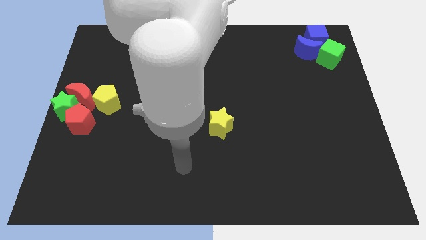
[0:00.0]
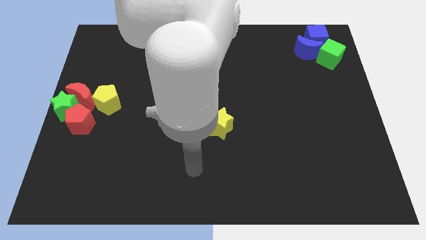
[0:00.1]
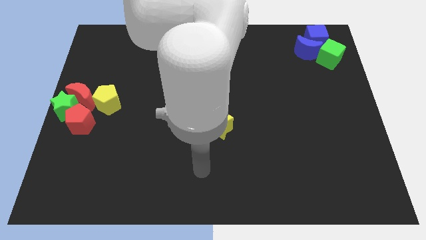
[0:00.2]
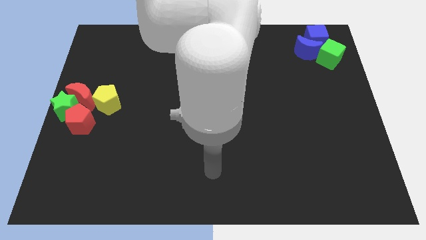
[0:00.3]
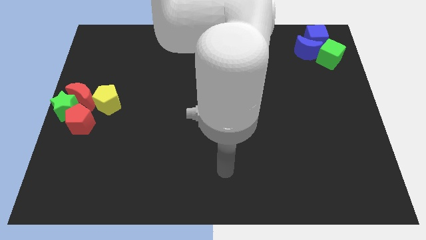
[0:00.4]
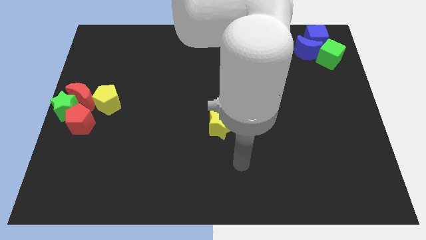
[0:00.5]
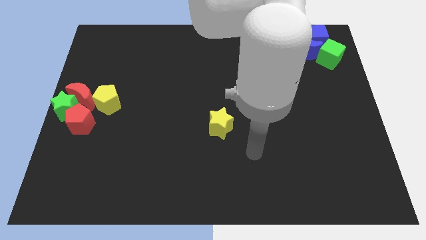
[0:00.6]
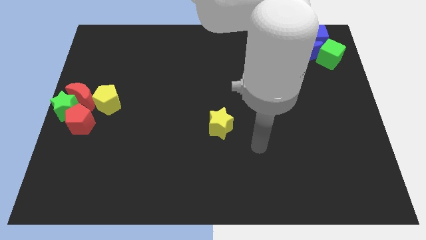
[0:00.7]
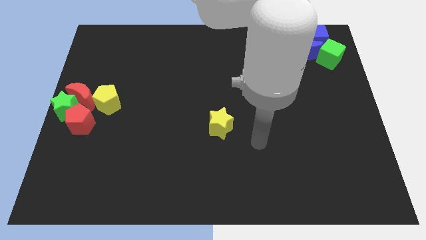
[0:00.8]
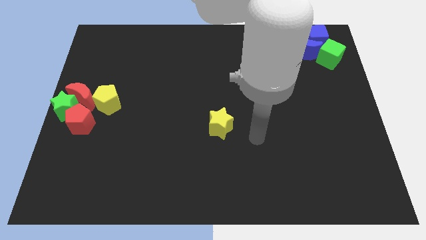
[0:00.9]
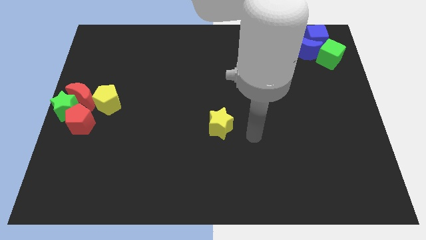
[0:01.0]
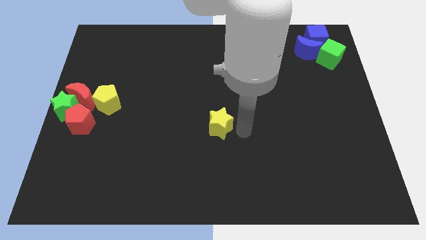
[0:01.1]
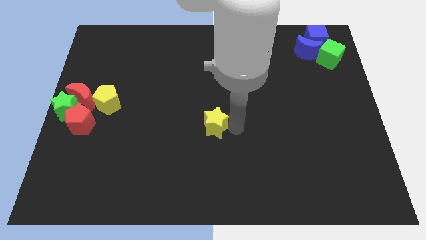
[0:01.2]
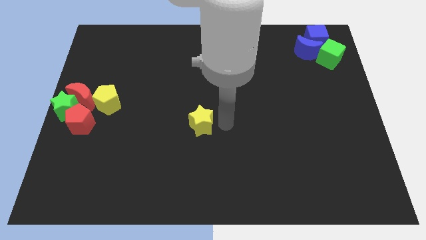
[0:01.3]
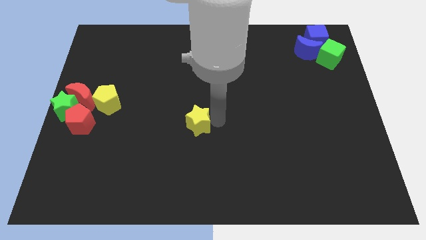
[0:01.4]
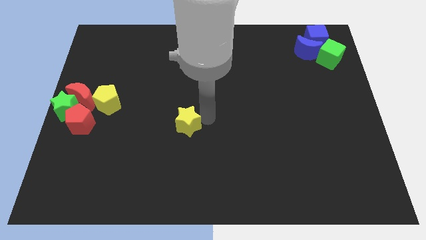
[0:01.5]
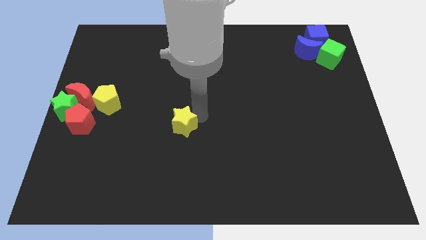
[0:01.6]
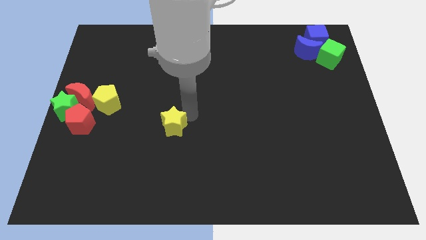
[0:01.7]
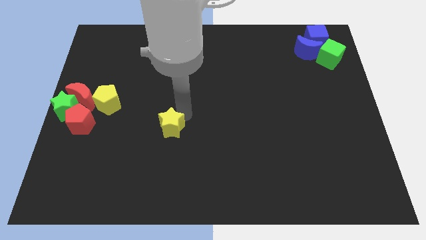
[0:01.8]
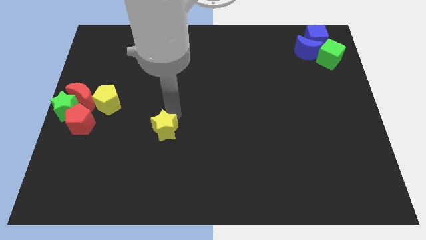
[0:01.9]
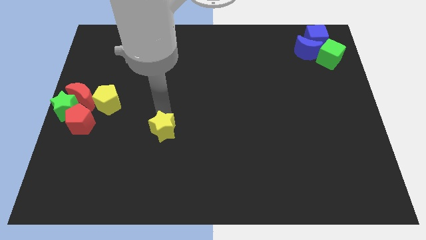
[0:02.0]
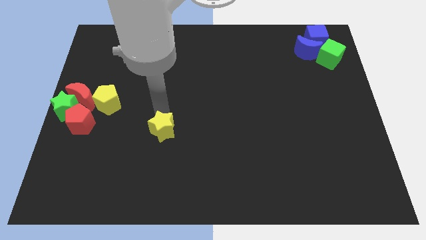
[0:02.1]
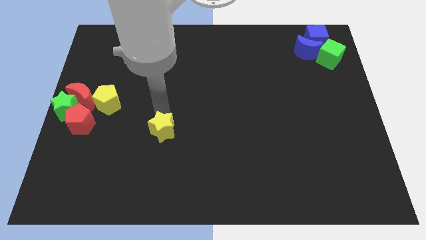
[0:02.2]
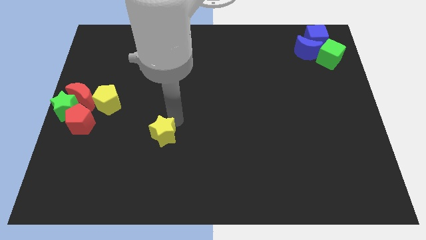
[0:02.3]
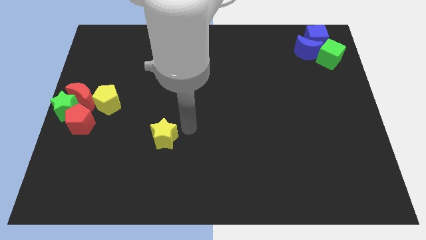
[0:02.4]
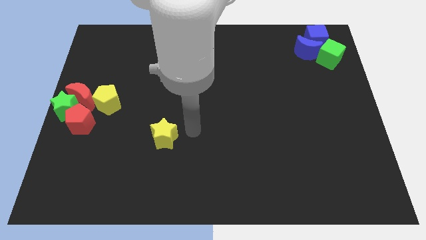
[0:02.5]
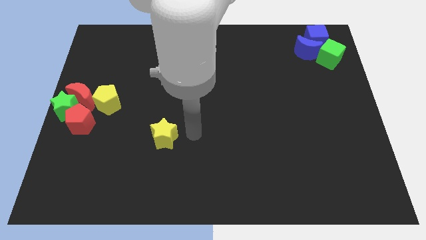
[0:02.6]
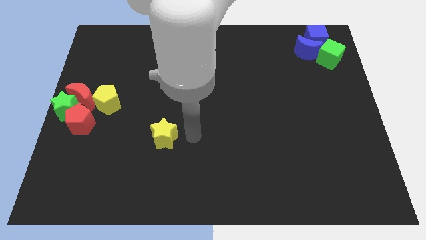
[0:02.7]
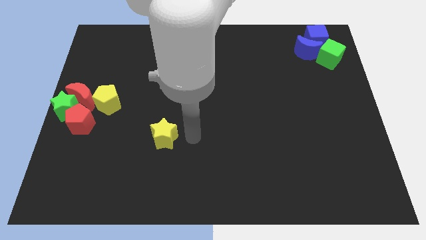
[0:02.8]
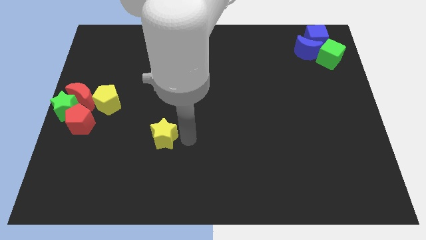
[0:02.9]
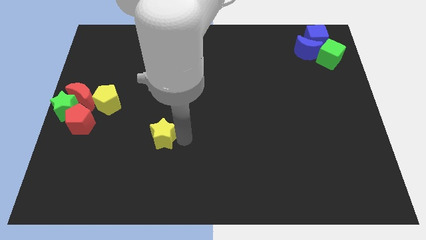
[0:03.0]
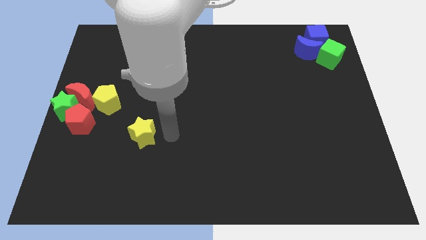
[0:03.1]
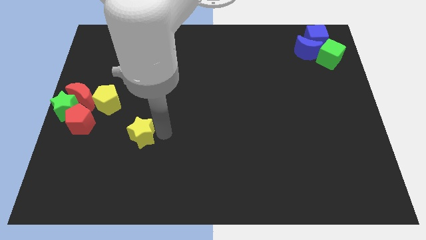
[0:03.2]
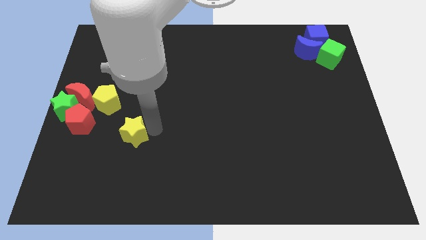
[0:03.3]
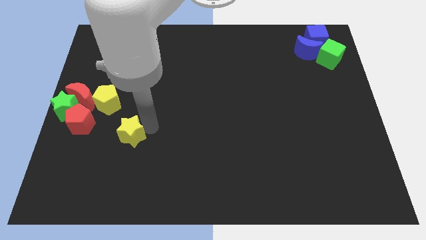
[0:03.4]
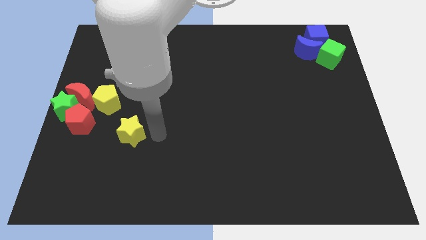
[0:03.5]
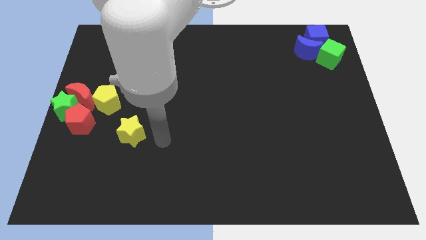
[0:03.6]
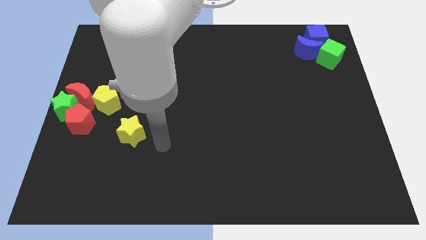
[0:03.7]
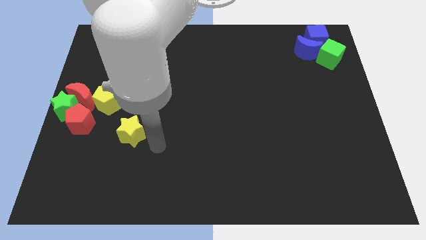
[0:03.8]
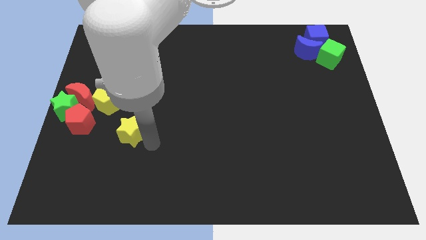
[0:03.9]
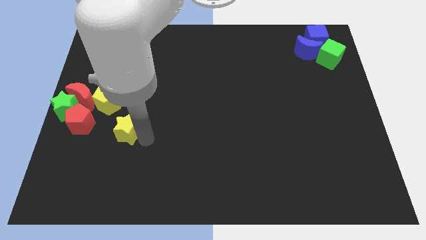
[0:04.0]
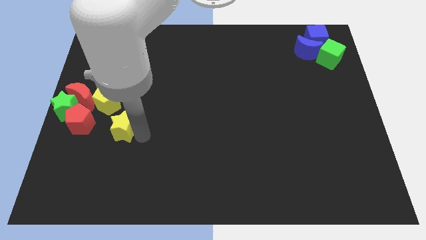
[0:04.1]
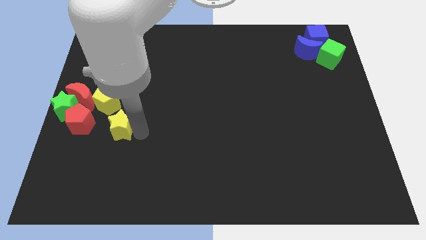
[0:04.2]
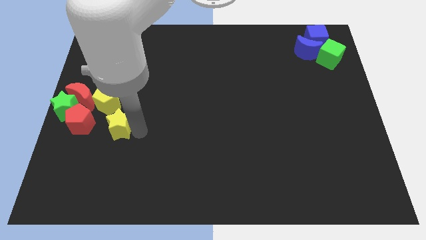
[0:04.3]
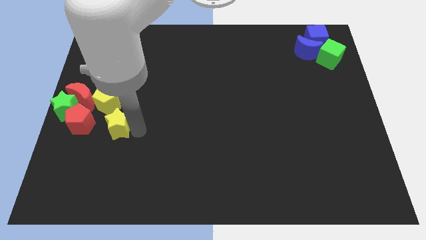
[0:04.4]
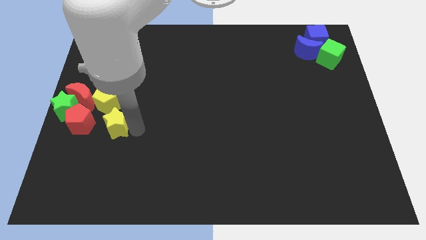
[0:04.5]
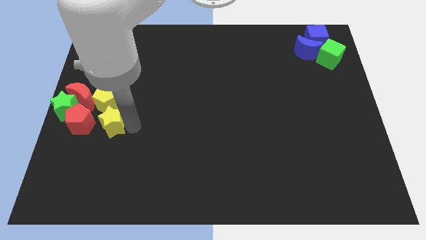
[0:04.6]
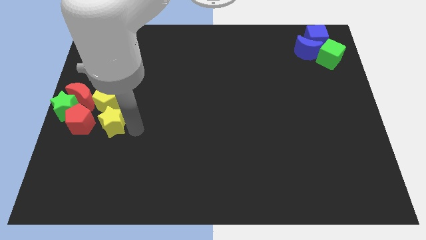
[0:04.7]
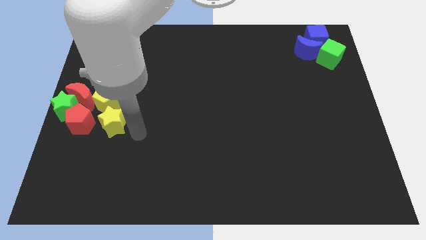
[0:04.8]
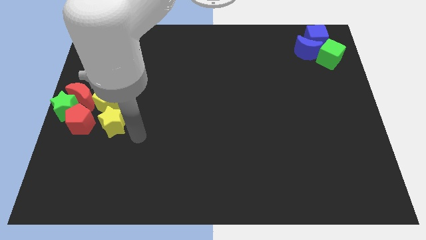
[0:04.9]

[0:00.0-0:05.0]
move the yellow star to the right of the red pentagon

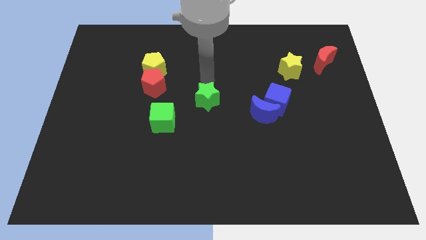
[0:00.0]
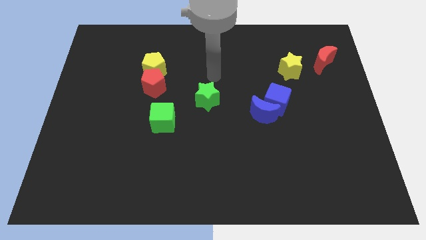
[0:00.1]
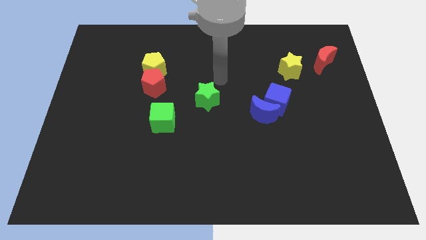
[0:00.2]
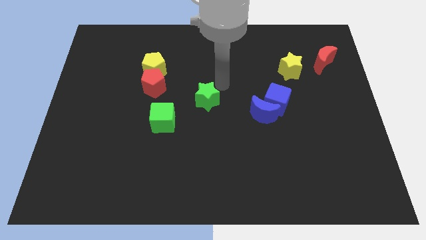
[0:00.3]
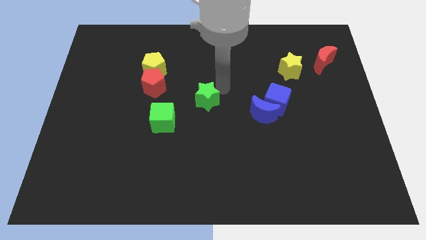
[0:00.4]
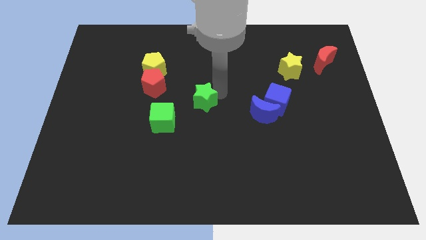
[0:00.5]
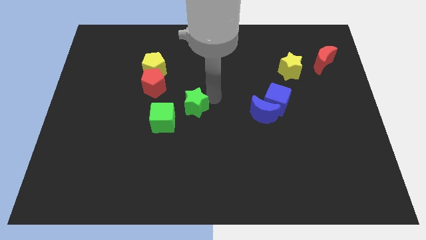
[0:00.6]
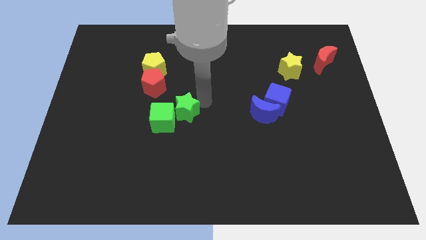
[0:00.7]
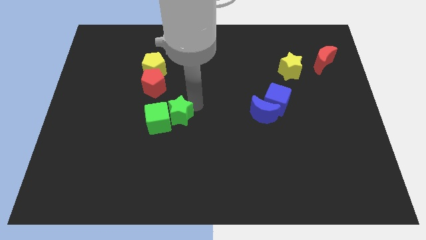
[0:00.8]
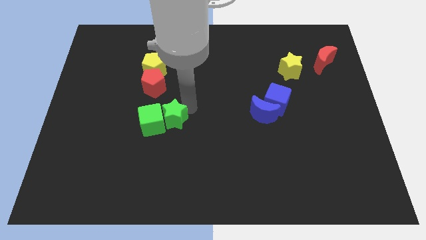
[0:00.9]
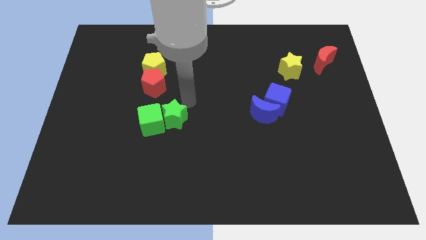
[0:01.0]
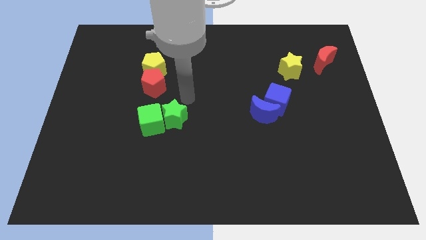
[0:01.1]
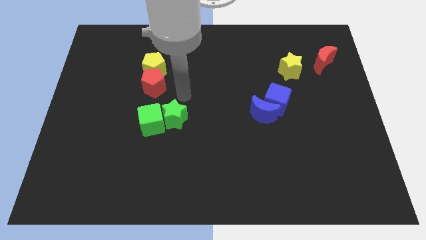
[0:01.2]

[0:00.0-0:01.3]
put the green blocks together

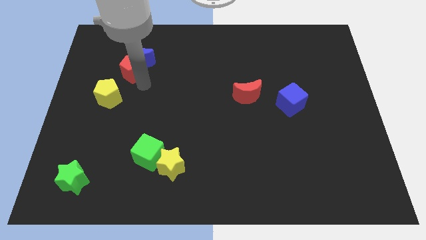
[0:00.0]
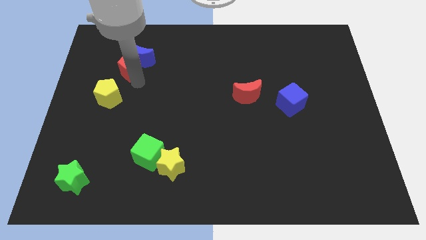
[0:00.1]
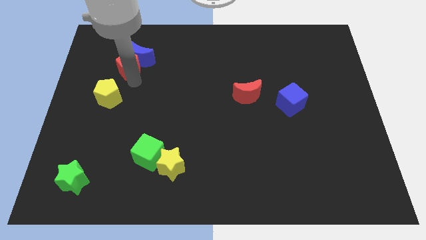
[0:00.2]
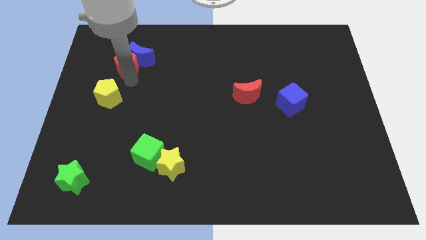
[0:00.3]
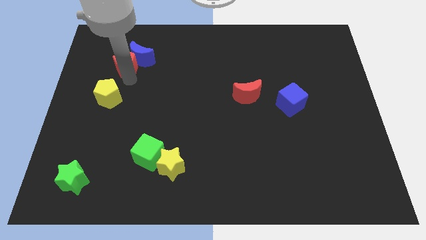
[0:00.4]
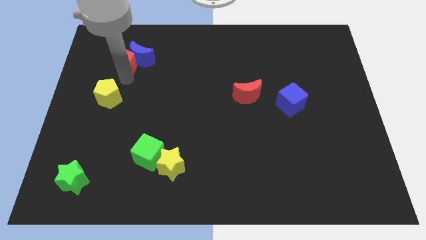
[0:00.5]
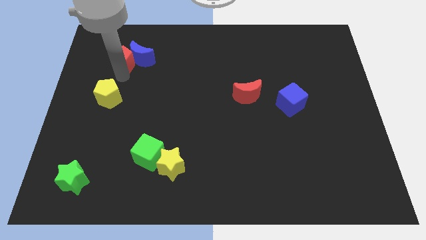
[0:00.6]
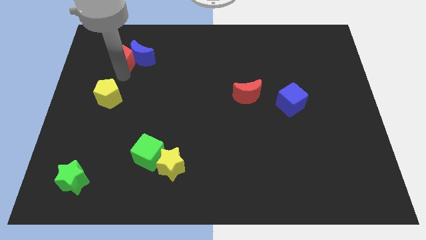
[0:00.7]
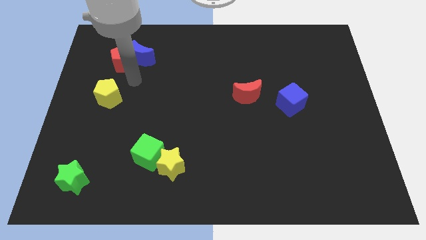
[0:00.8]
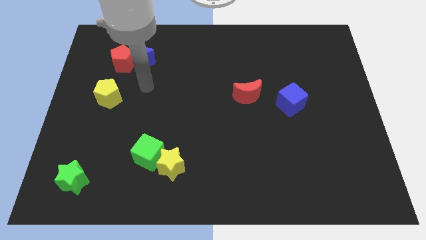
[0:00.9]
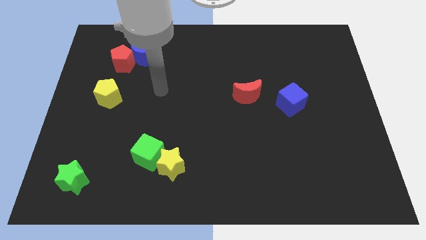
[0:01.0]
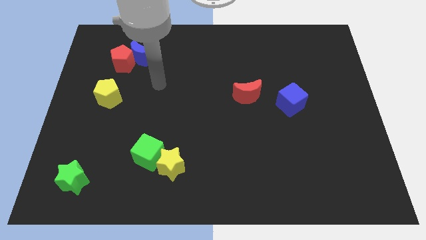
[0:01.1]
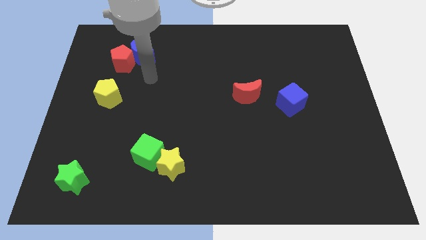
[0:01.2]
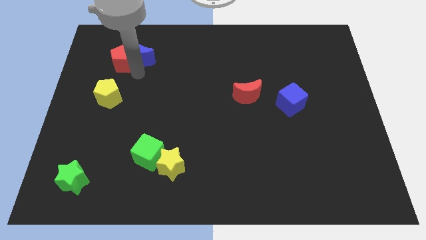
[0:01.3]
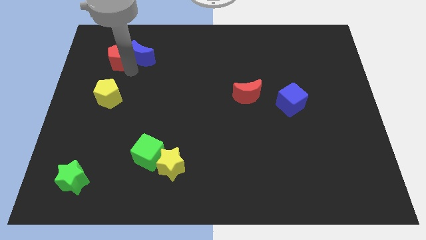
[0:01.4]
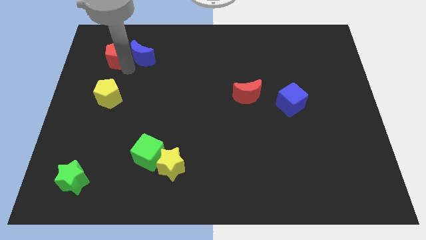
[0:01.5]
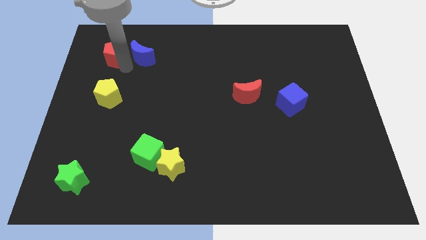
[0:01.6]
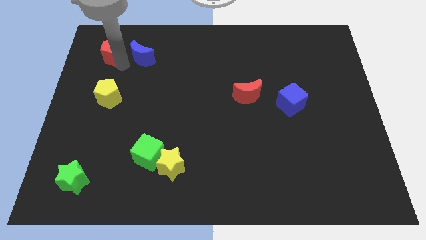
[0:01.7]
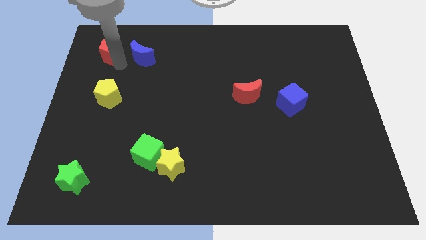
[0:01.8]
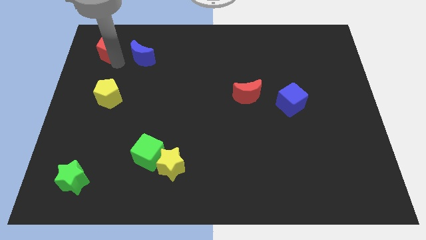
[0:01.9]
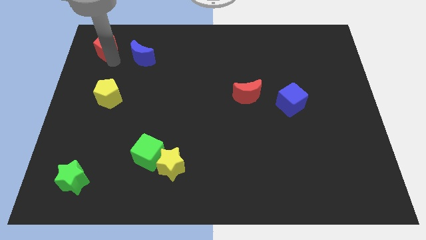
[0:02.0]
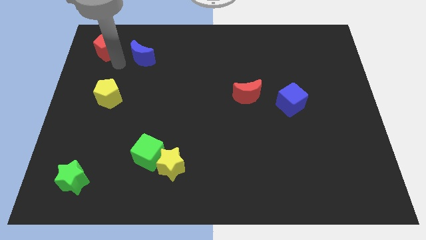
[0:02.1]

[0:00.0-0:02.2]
place the red pentagon above the yellow pentagon

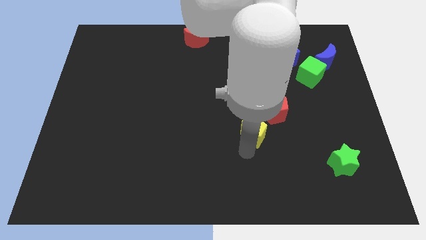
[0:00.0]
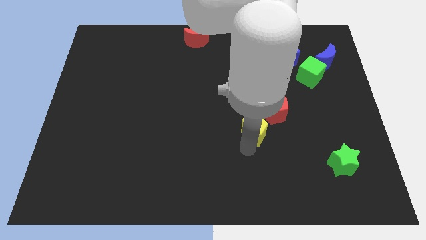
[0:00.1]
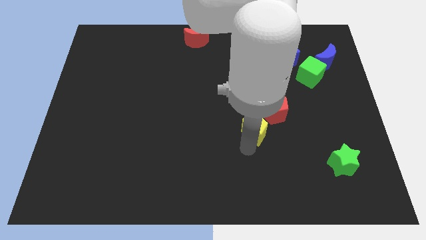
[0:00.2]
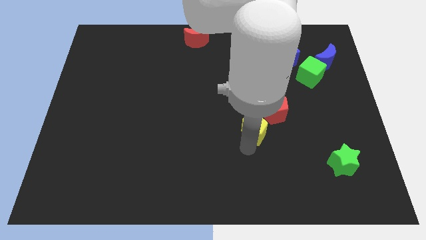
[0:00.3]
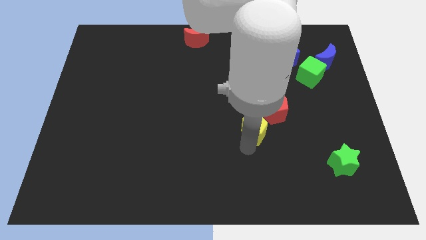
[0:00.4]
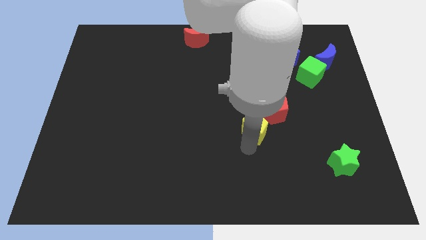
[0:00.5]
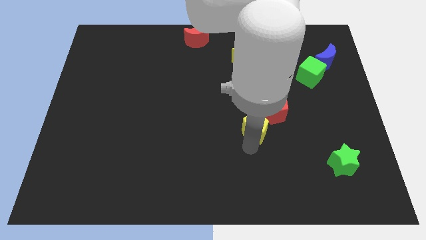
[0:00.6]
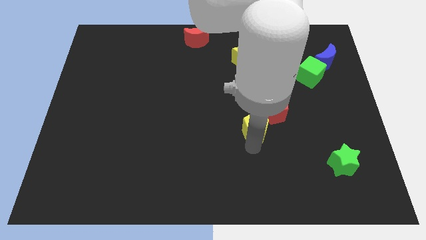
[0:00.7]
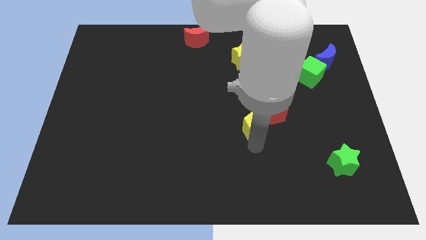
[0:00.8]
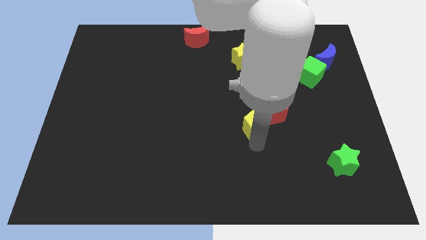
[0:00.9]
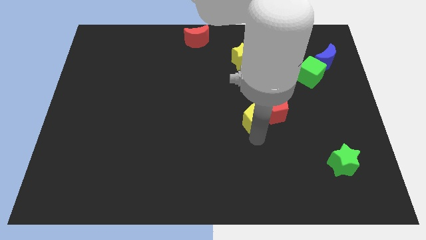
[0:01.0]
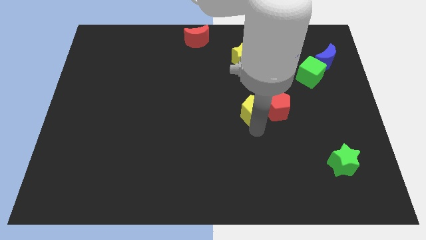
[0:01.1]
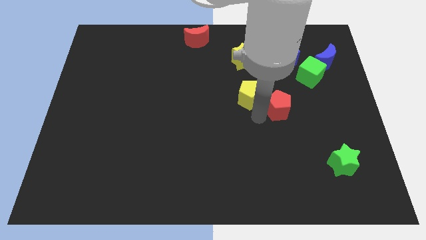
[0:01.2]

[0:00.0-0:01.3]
move the yellow pentagon into the red pentagon
